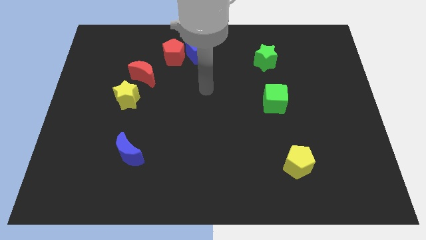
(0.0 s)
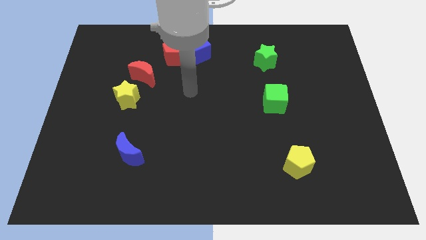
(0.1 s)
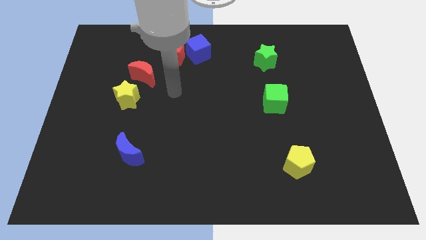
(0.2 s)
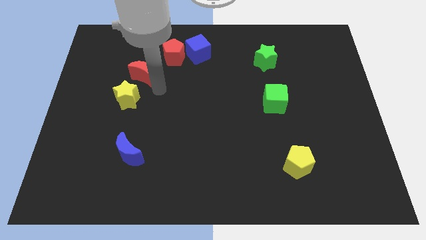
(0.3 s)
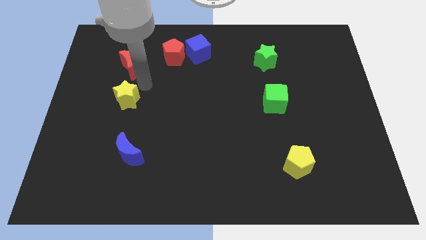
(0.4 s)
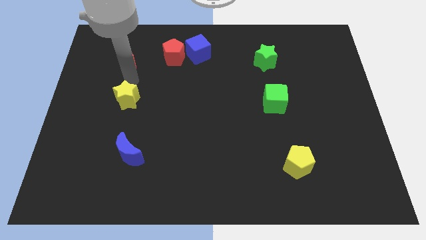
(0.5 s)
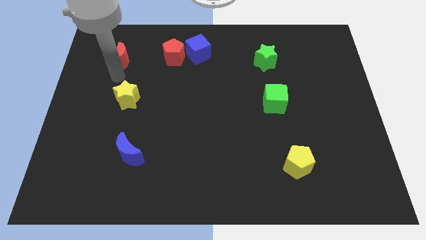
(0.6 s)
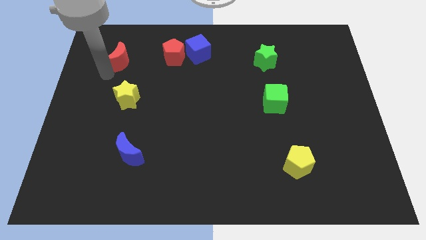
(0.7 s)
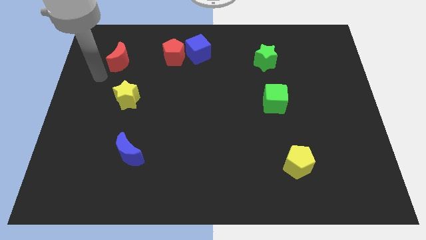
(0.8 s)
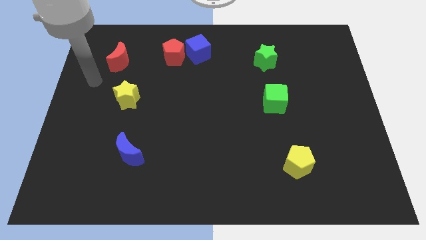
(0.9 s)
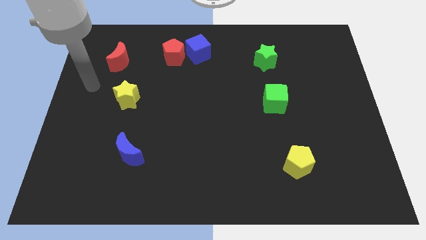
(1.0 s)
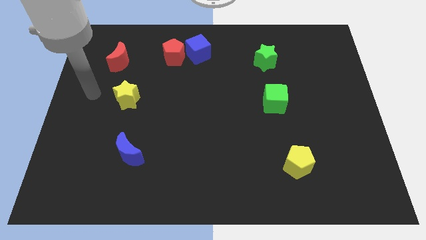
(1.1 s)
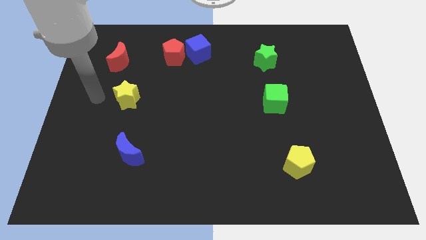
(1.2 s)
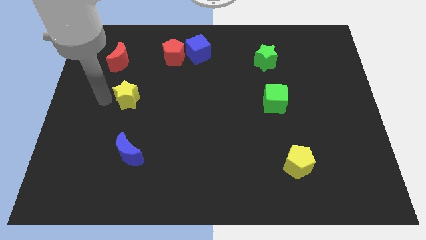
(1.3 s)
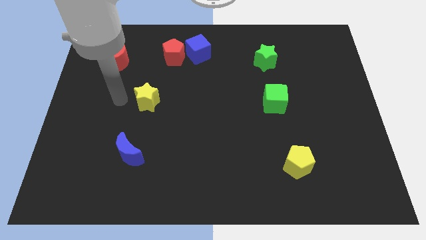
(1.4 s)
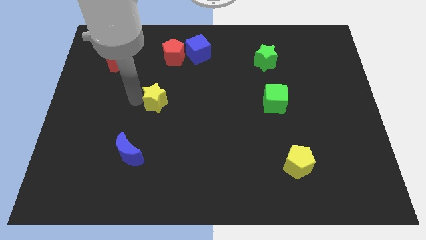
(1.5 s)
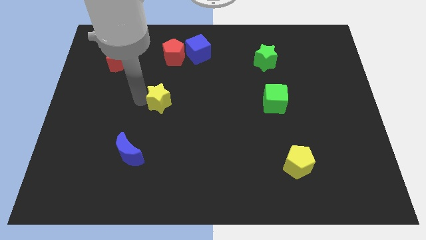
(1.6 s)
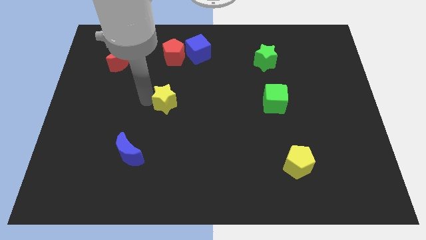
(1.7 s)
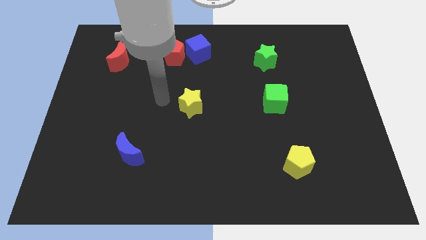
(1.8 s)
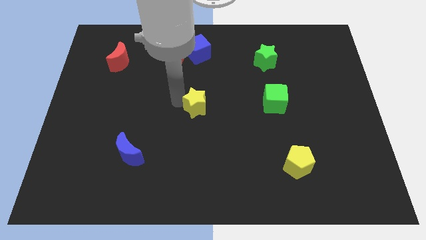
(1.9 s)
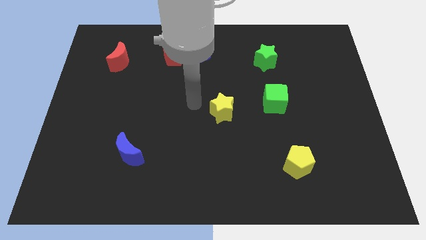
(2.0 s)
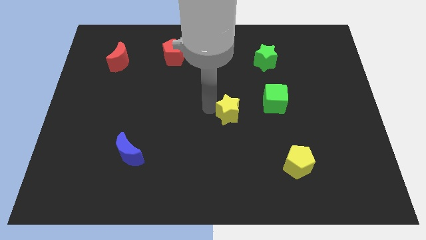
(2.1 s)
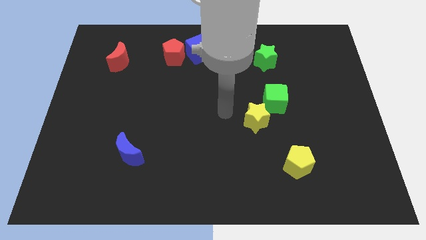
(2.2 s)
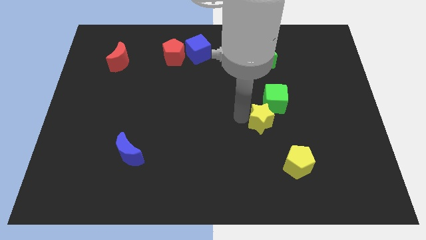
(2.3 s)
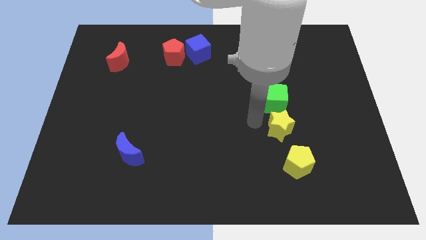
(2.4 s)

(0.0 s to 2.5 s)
move the yellow star down to the green cube

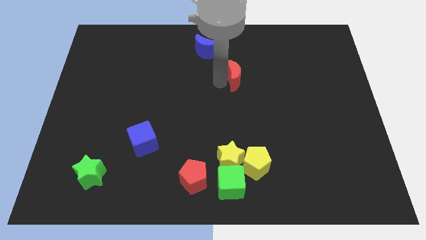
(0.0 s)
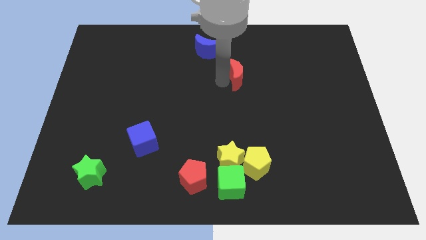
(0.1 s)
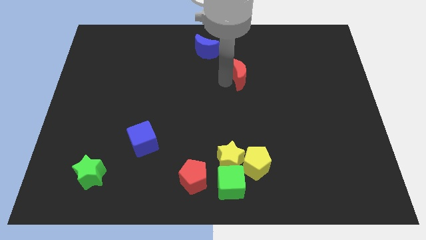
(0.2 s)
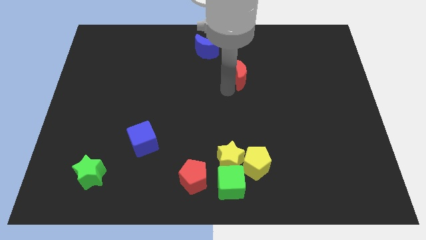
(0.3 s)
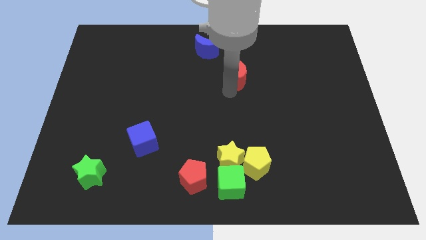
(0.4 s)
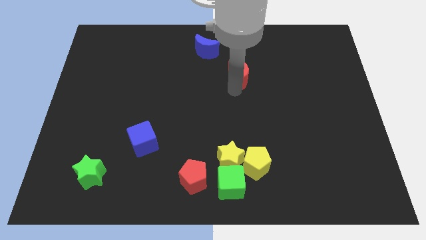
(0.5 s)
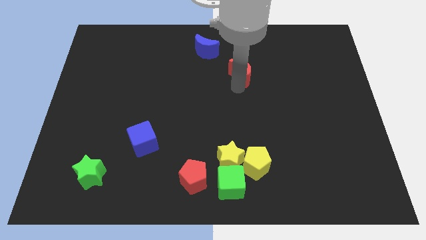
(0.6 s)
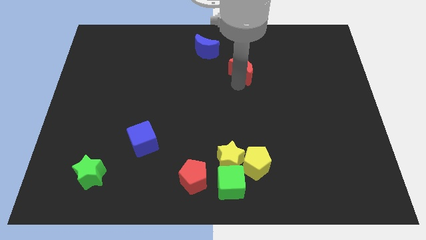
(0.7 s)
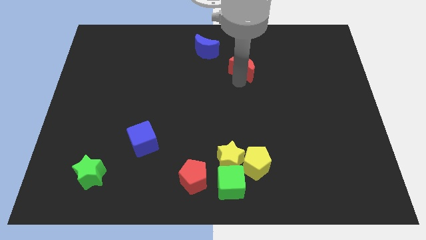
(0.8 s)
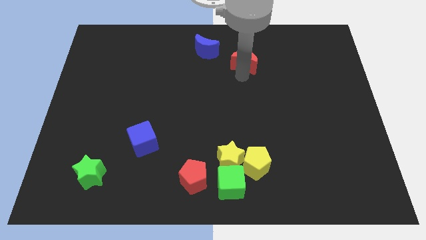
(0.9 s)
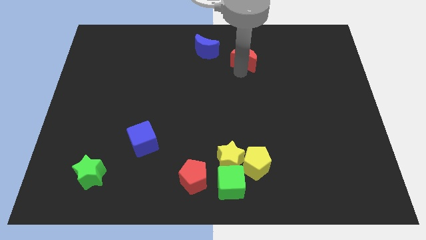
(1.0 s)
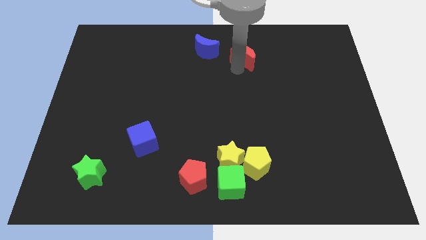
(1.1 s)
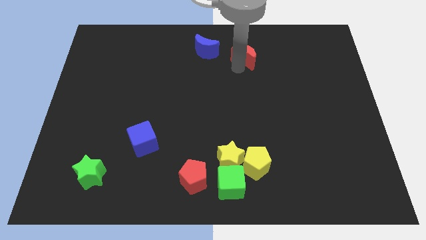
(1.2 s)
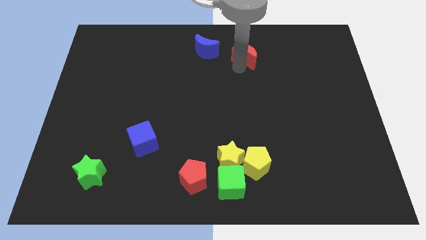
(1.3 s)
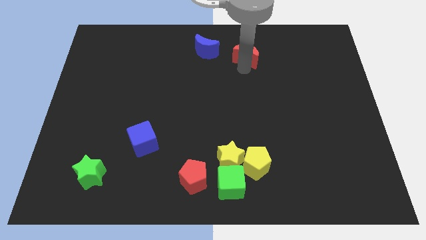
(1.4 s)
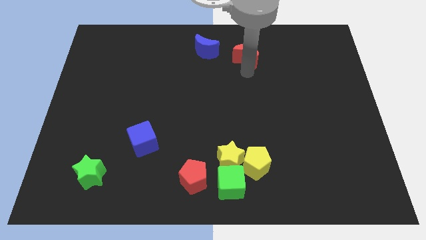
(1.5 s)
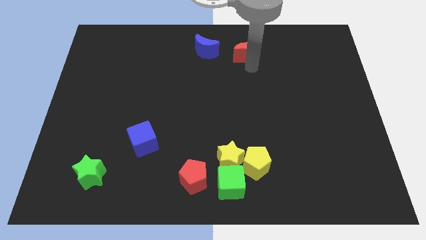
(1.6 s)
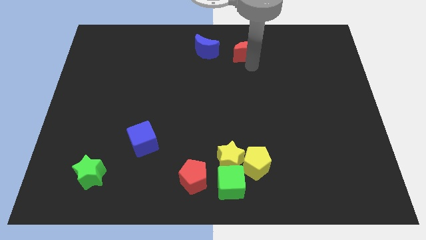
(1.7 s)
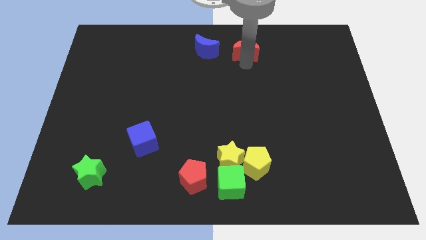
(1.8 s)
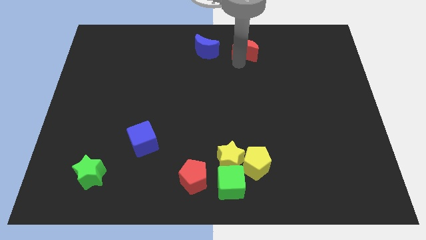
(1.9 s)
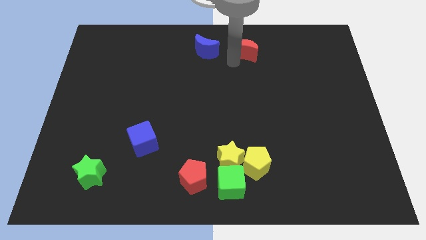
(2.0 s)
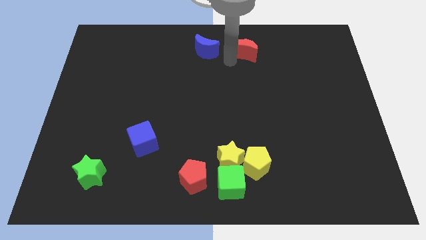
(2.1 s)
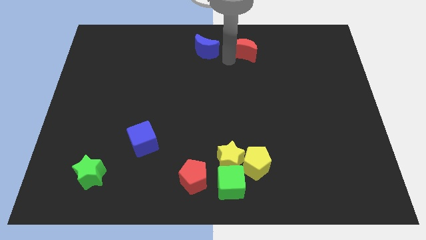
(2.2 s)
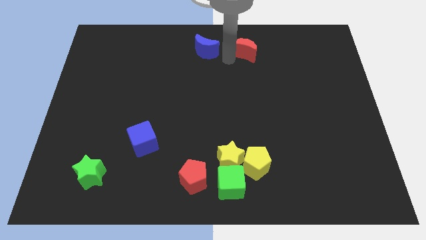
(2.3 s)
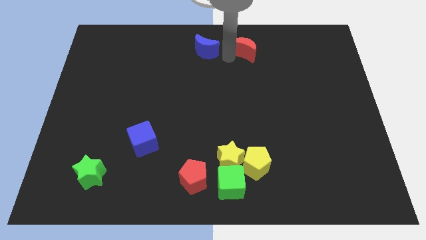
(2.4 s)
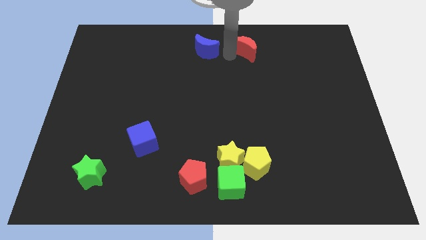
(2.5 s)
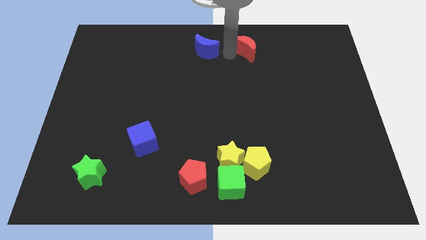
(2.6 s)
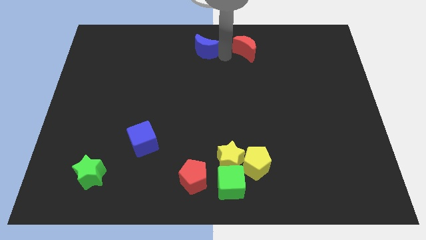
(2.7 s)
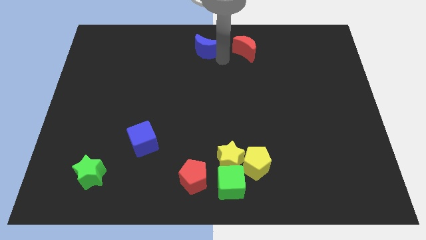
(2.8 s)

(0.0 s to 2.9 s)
place the red crescent to the right side of blue crescent

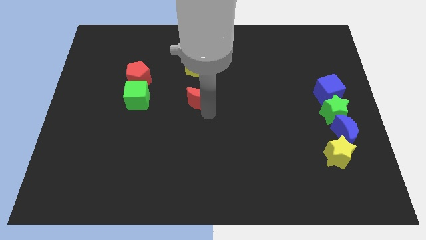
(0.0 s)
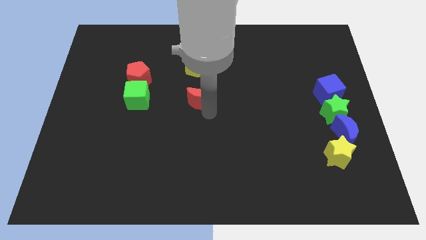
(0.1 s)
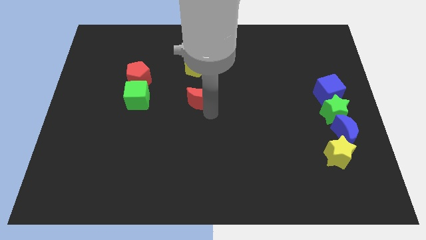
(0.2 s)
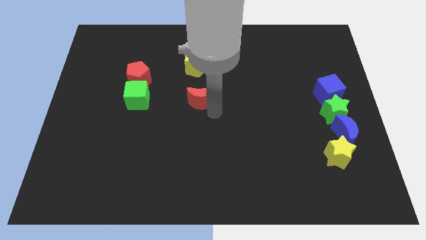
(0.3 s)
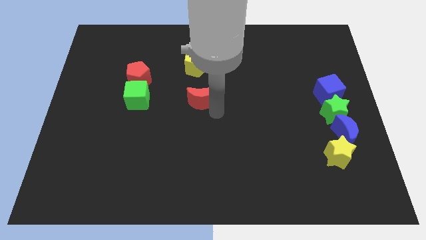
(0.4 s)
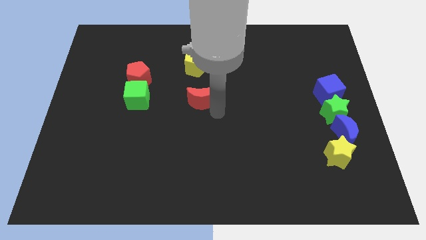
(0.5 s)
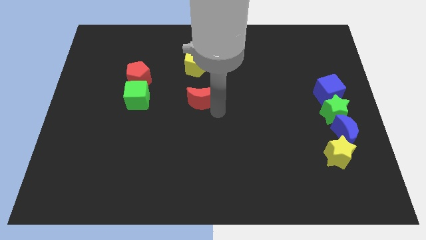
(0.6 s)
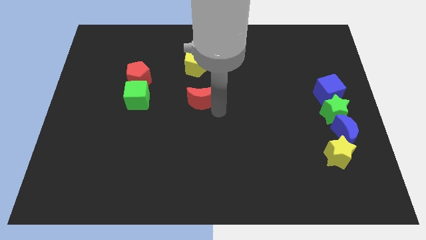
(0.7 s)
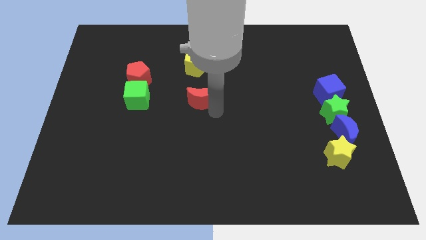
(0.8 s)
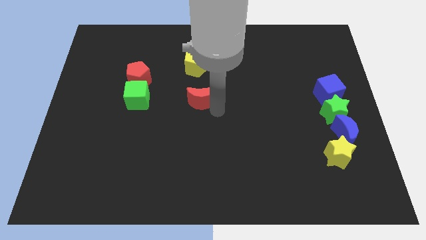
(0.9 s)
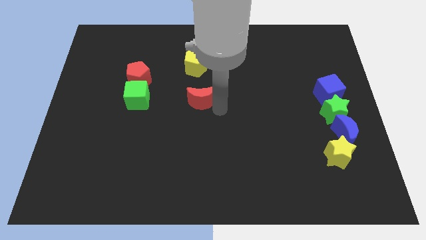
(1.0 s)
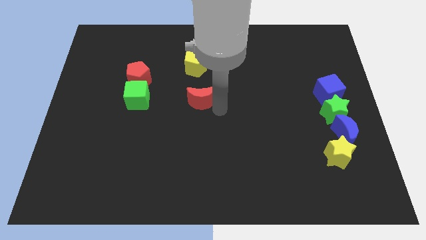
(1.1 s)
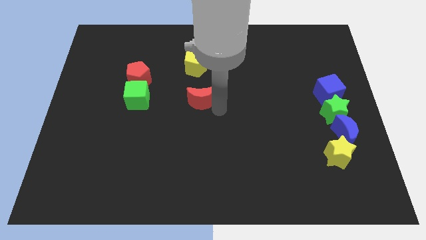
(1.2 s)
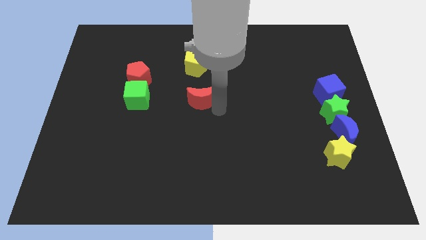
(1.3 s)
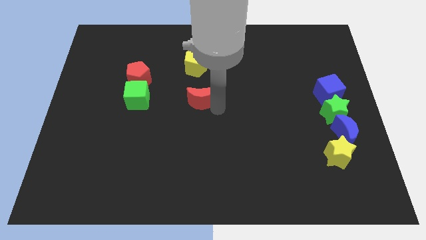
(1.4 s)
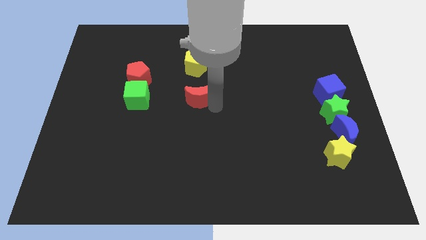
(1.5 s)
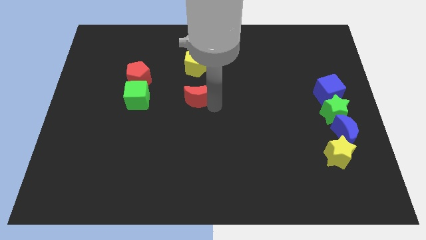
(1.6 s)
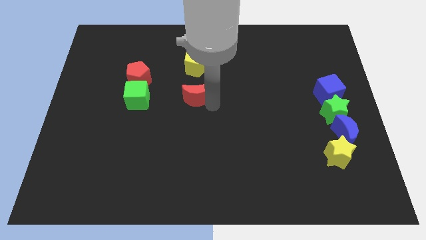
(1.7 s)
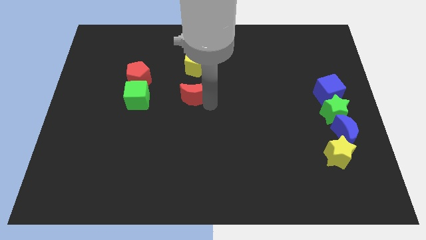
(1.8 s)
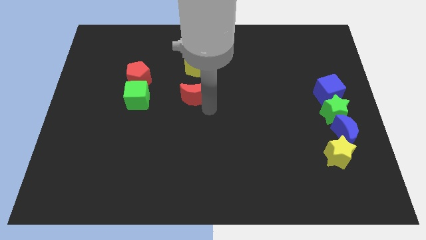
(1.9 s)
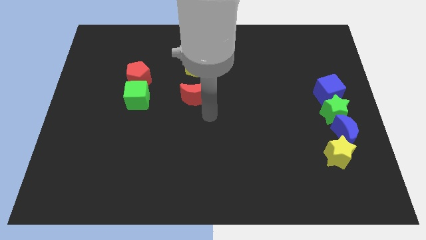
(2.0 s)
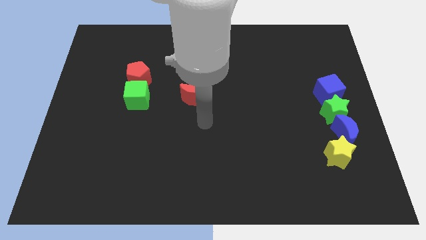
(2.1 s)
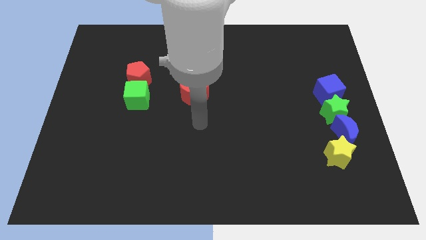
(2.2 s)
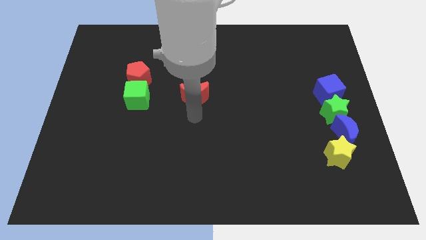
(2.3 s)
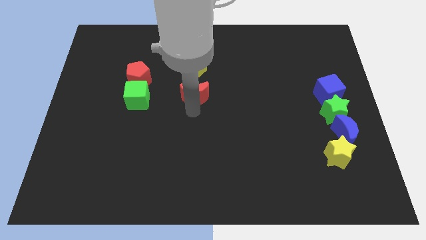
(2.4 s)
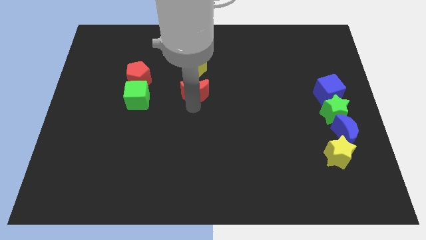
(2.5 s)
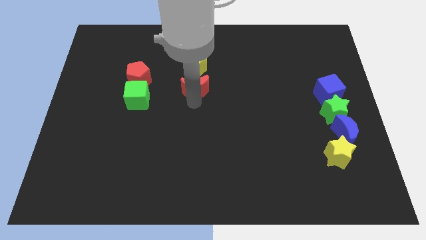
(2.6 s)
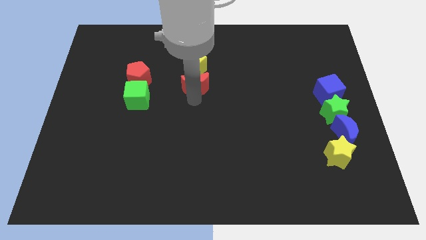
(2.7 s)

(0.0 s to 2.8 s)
move red moon into yellow star

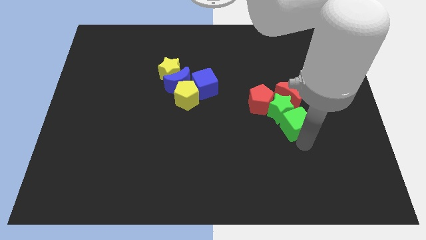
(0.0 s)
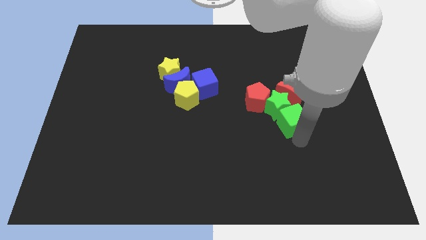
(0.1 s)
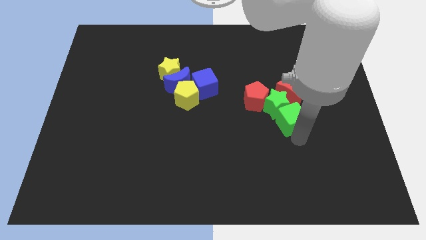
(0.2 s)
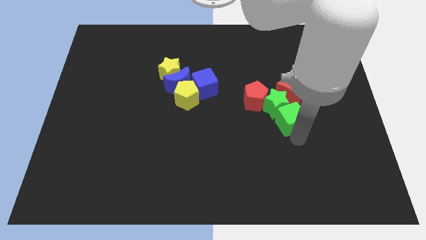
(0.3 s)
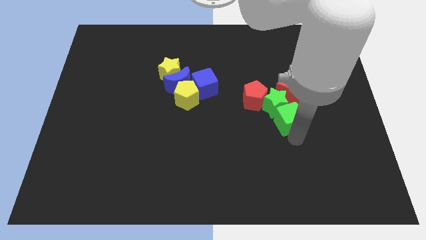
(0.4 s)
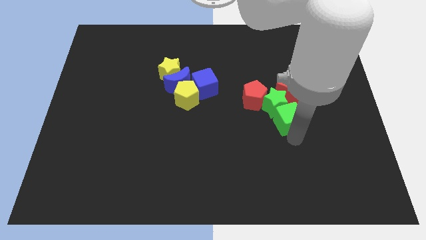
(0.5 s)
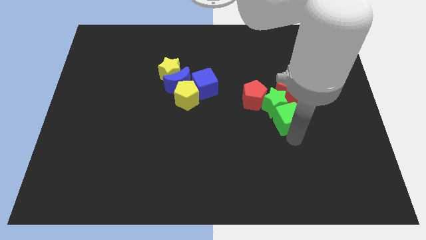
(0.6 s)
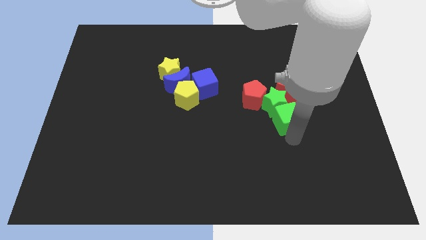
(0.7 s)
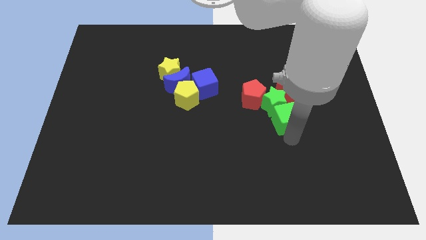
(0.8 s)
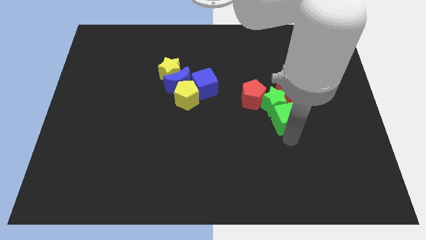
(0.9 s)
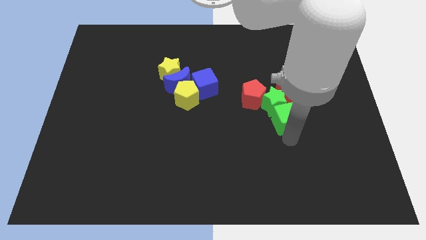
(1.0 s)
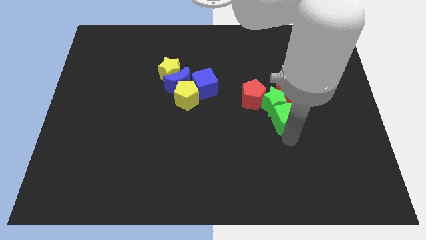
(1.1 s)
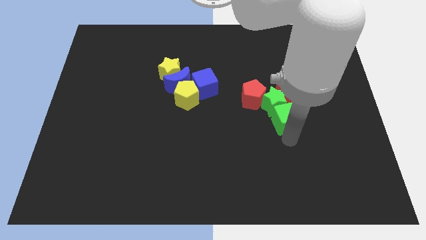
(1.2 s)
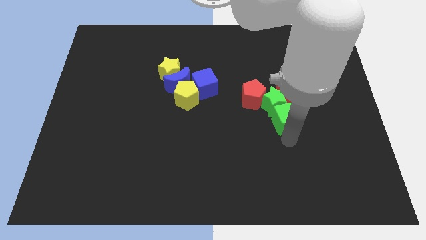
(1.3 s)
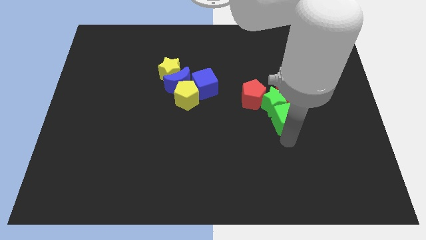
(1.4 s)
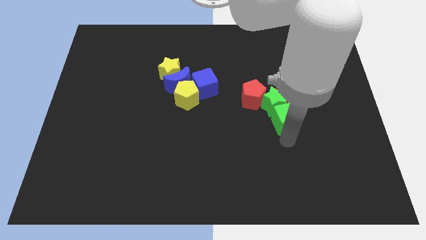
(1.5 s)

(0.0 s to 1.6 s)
move green star with the green cube
